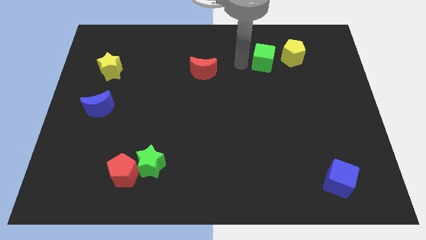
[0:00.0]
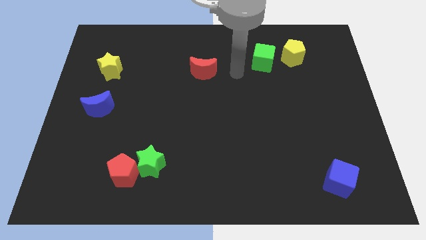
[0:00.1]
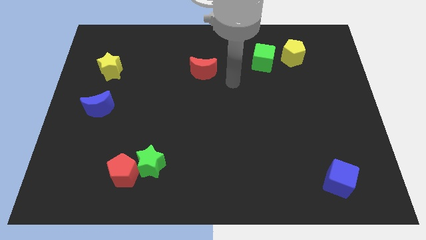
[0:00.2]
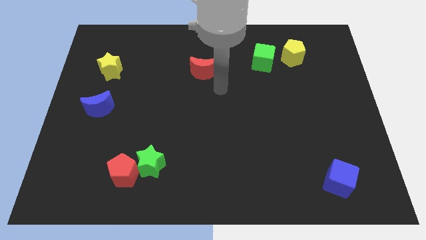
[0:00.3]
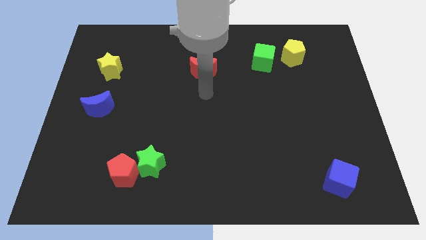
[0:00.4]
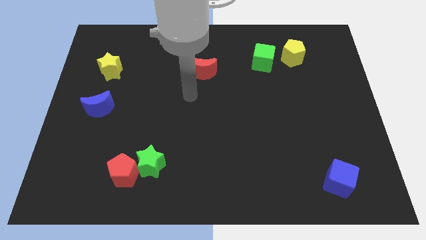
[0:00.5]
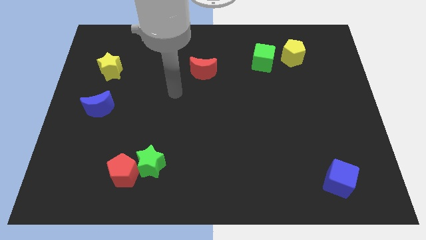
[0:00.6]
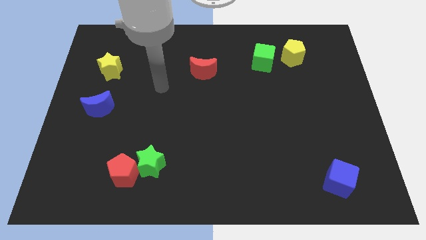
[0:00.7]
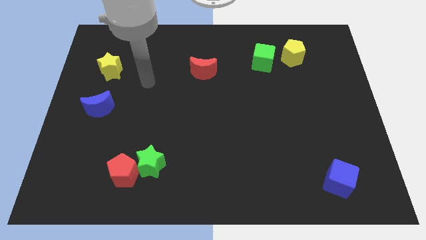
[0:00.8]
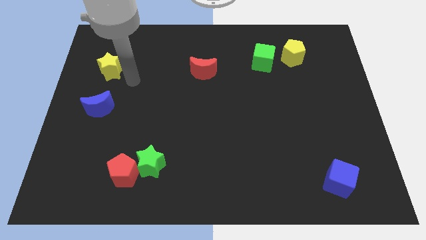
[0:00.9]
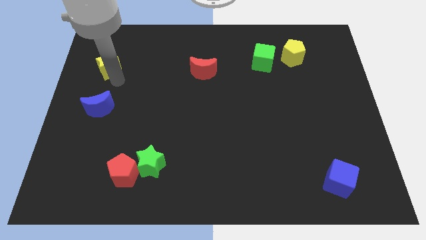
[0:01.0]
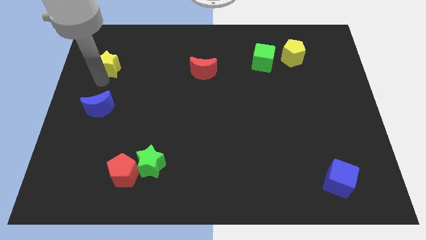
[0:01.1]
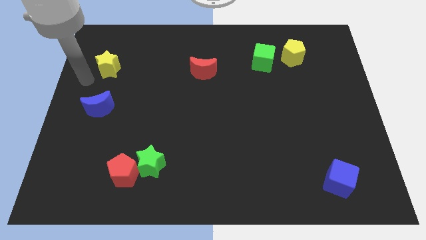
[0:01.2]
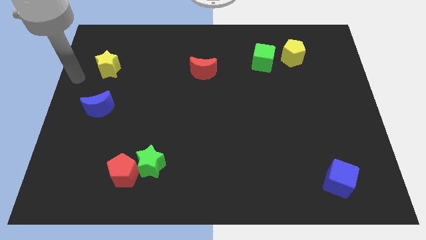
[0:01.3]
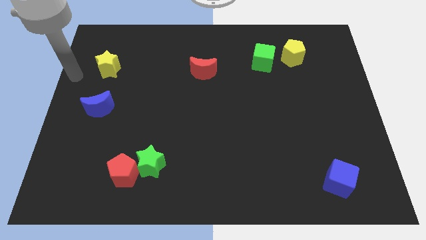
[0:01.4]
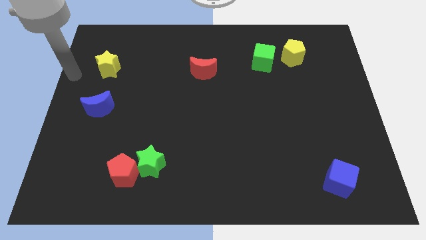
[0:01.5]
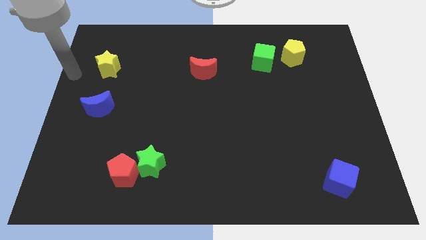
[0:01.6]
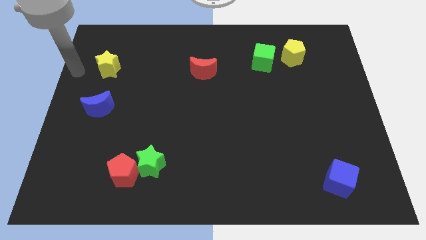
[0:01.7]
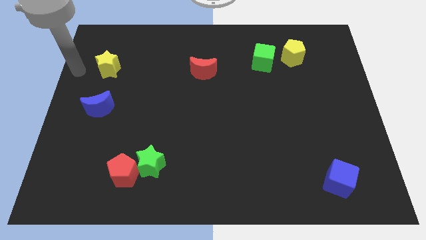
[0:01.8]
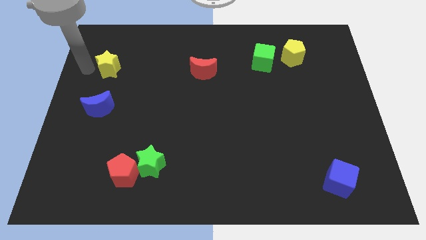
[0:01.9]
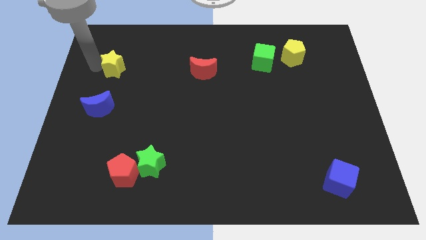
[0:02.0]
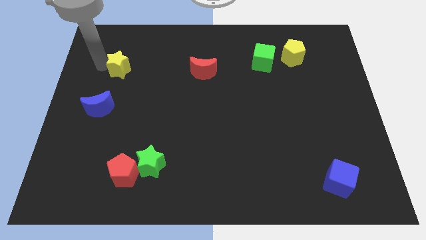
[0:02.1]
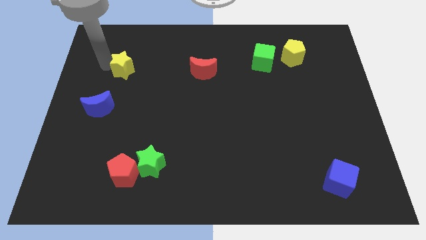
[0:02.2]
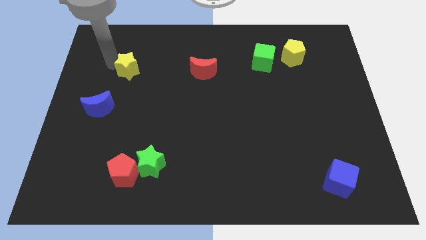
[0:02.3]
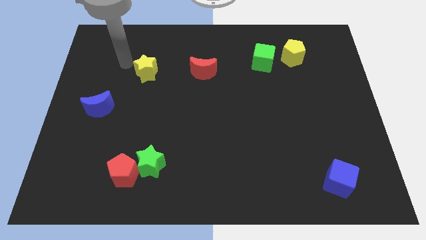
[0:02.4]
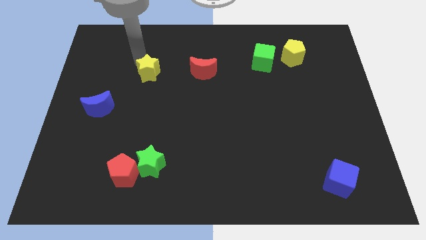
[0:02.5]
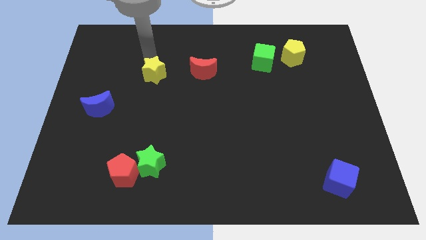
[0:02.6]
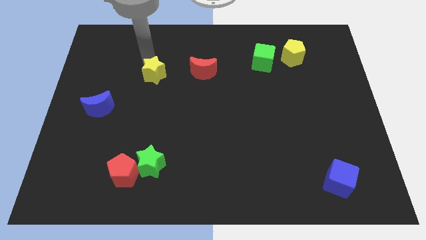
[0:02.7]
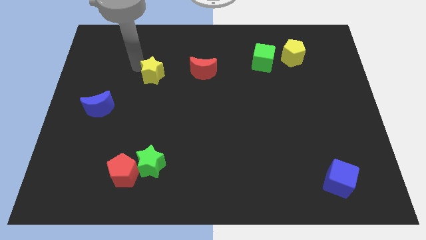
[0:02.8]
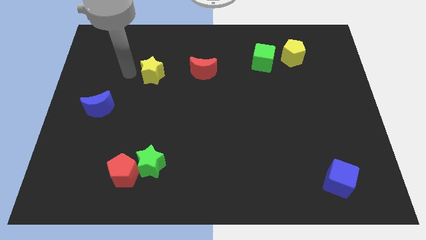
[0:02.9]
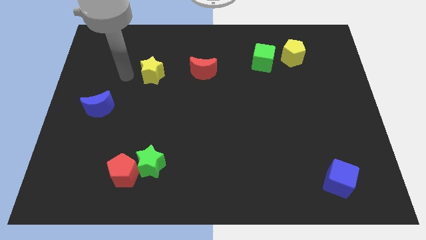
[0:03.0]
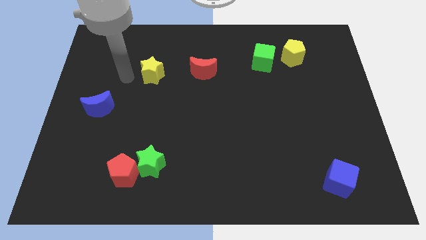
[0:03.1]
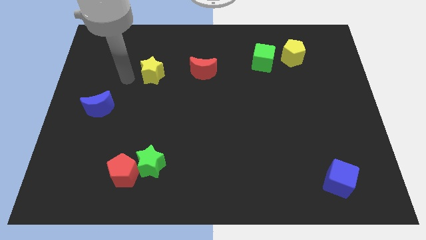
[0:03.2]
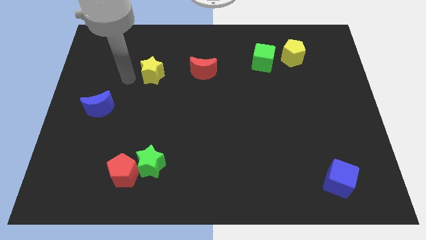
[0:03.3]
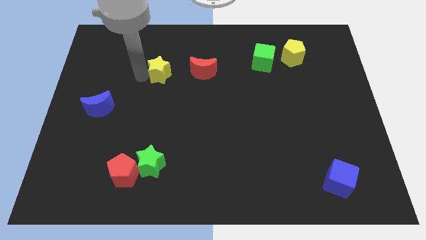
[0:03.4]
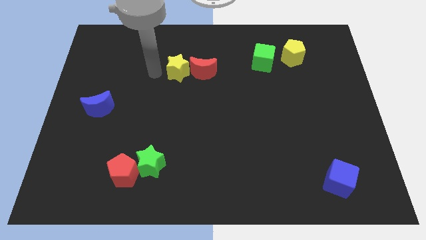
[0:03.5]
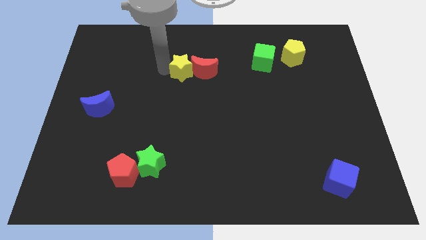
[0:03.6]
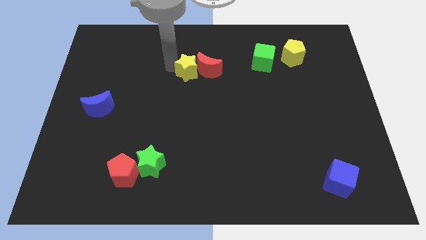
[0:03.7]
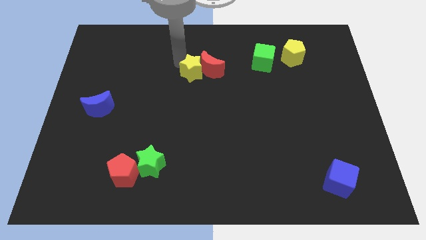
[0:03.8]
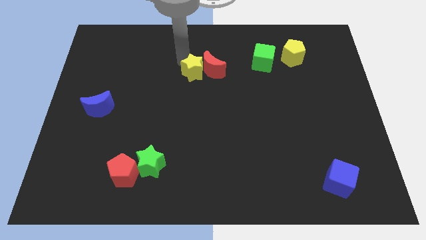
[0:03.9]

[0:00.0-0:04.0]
push the yellow star into the left side of the red moon

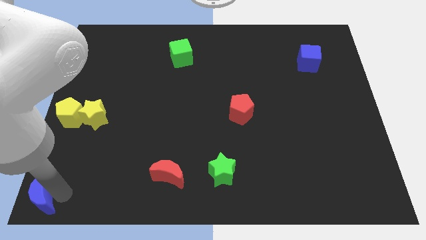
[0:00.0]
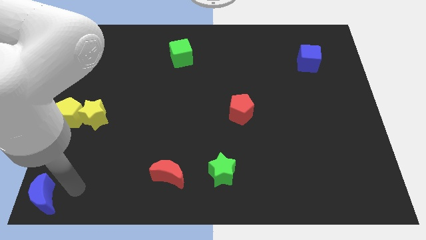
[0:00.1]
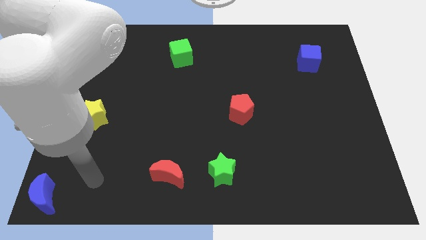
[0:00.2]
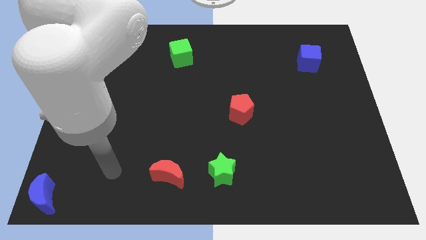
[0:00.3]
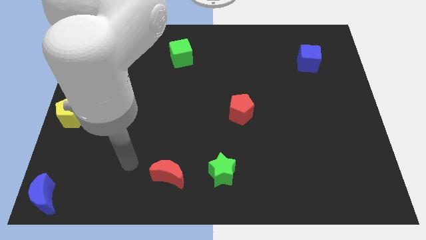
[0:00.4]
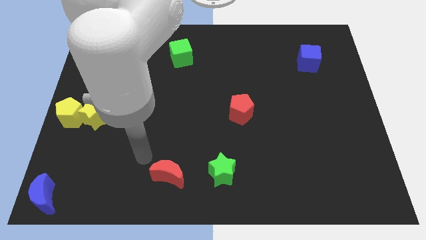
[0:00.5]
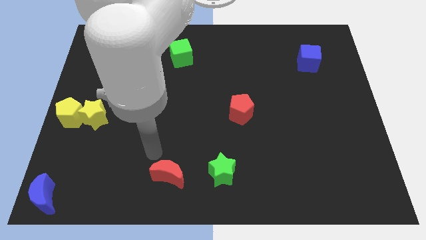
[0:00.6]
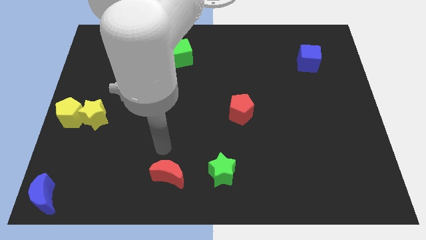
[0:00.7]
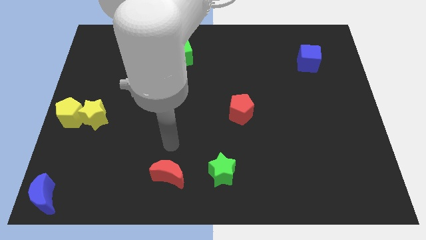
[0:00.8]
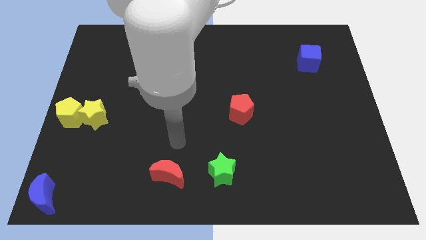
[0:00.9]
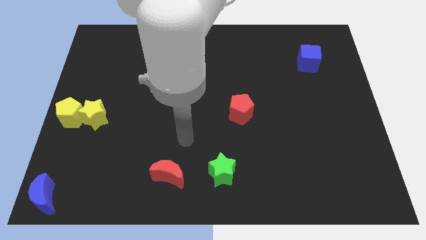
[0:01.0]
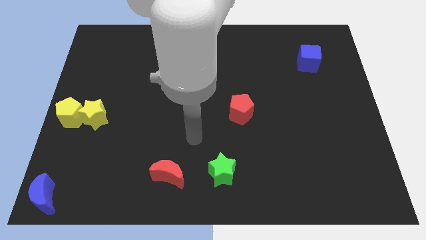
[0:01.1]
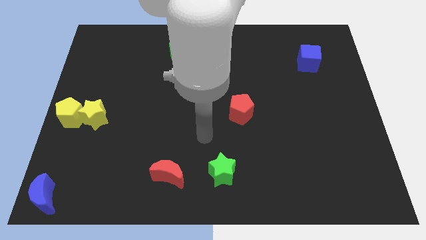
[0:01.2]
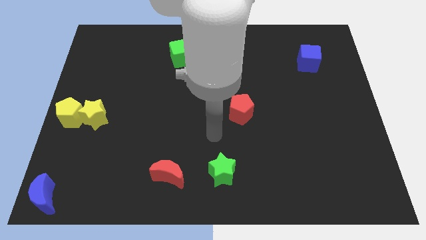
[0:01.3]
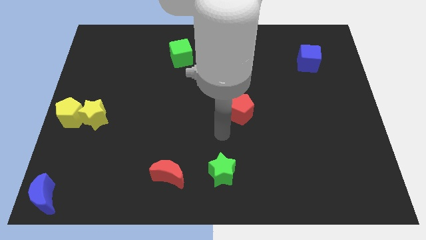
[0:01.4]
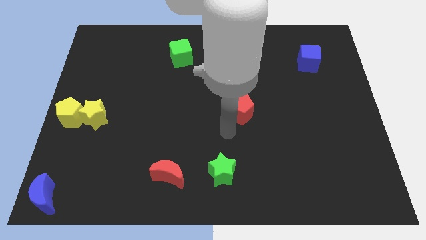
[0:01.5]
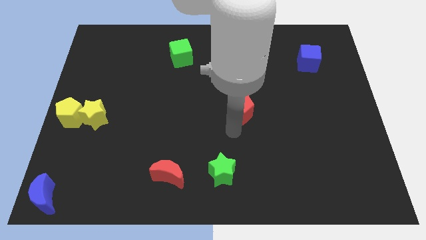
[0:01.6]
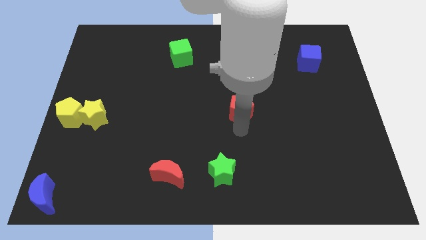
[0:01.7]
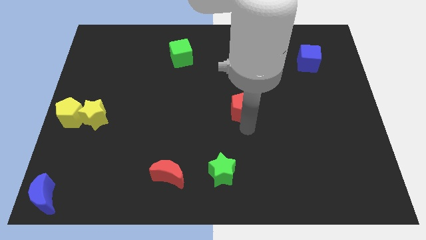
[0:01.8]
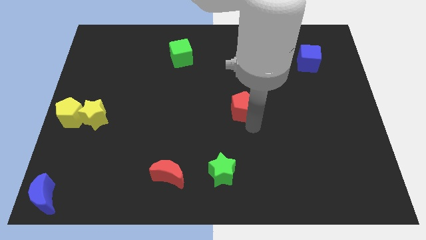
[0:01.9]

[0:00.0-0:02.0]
move your arm to the red pentagon

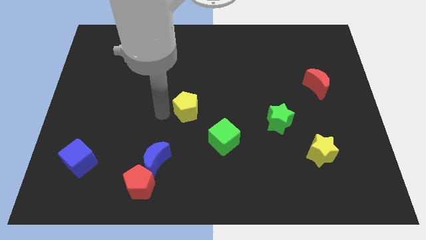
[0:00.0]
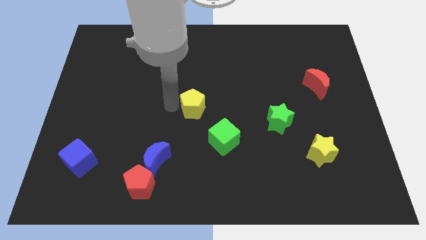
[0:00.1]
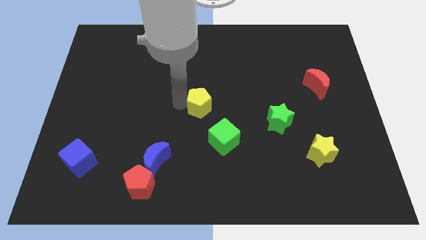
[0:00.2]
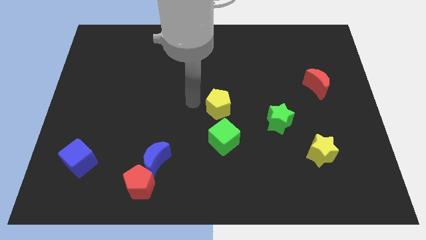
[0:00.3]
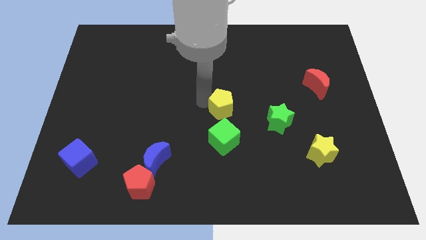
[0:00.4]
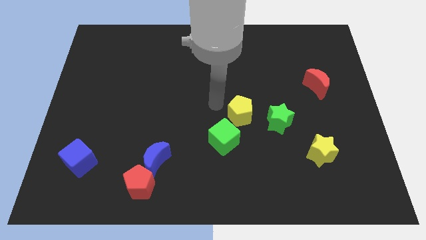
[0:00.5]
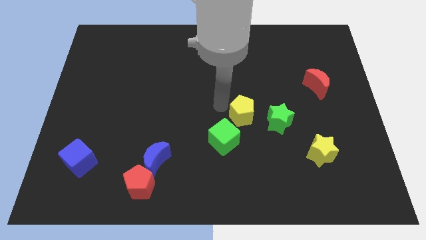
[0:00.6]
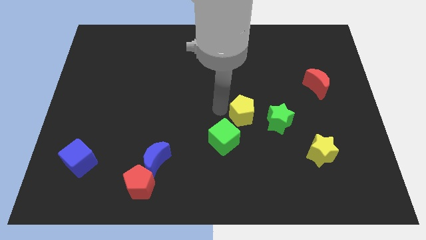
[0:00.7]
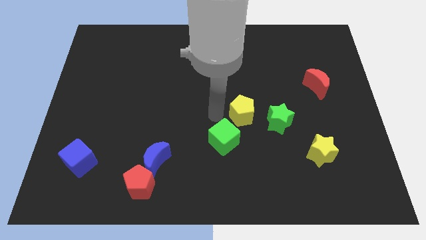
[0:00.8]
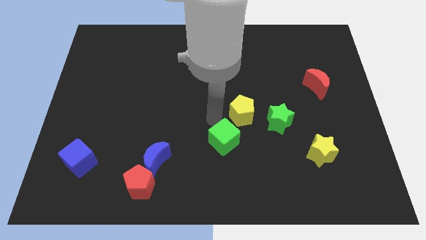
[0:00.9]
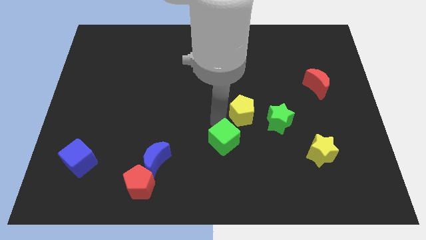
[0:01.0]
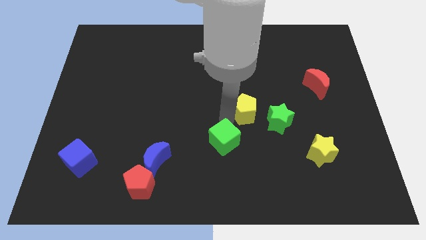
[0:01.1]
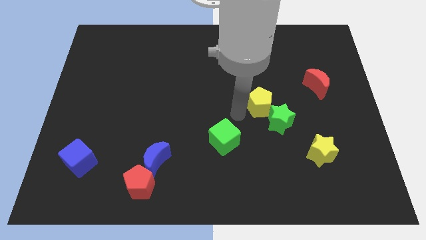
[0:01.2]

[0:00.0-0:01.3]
push the yellow pentagon into green star

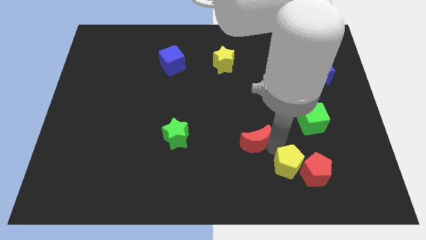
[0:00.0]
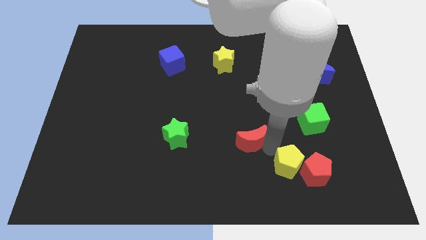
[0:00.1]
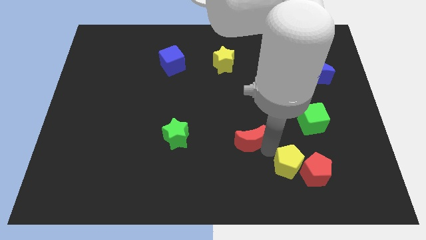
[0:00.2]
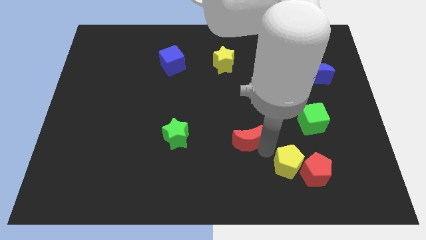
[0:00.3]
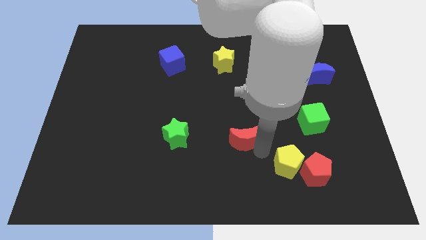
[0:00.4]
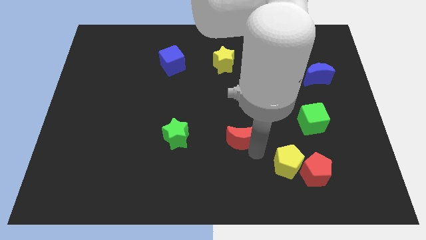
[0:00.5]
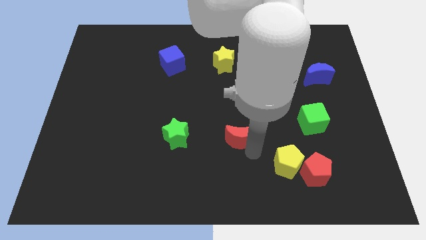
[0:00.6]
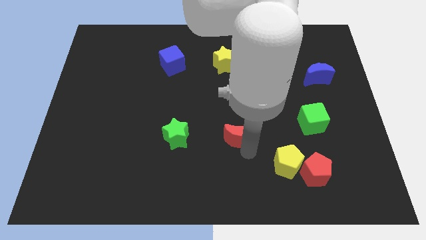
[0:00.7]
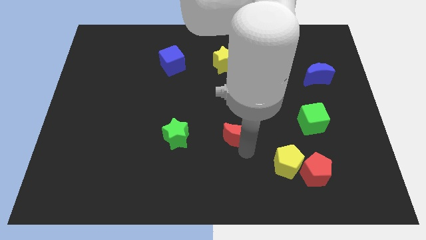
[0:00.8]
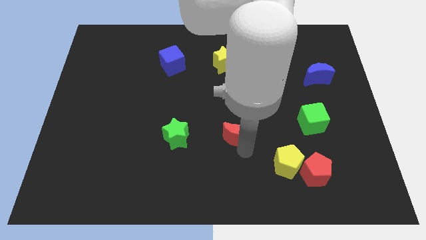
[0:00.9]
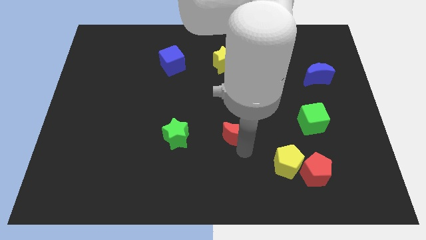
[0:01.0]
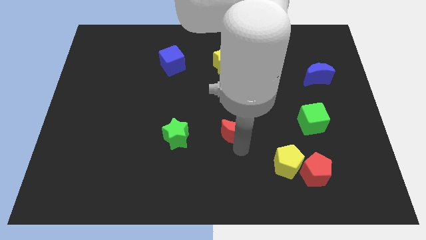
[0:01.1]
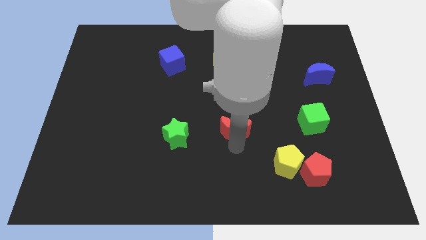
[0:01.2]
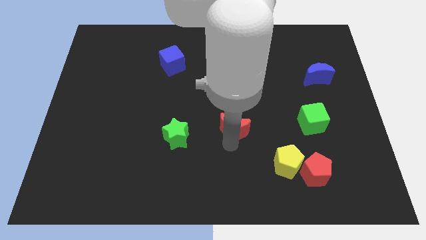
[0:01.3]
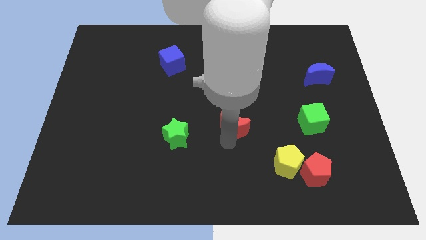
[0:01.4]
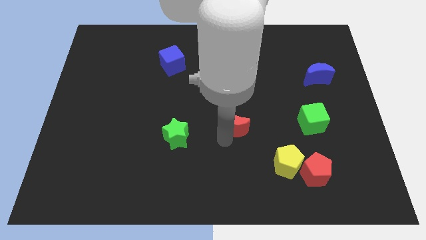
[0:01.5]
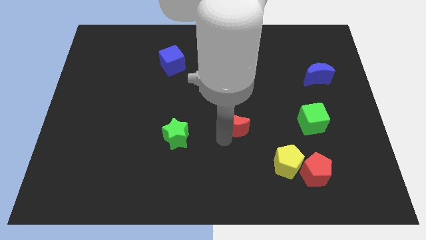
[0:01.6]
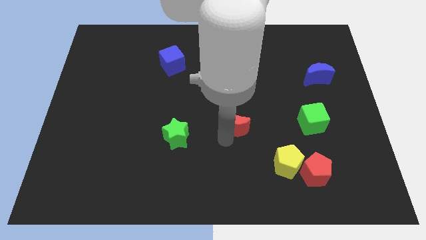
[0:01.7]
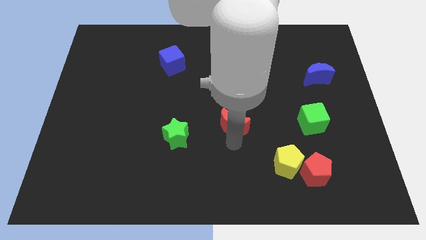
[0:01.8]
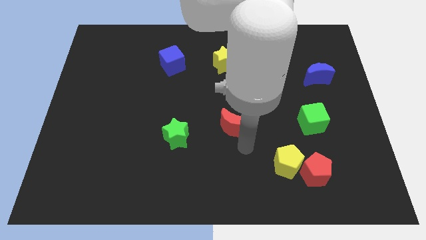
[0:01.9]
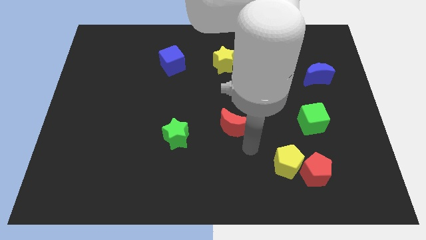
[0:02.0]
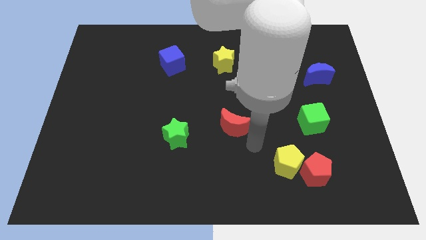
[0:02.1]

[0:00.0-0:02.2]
move the red crescent underneath the yellow star
